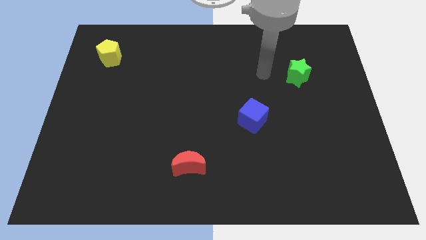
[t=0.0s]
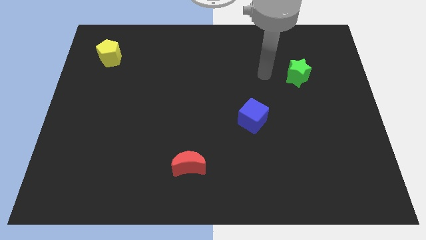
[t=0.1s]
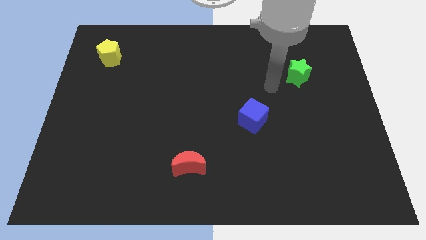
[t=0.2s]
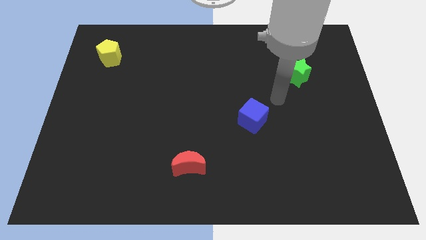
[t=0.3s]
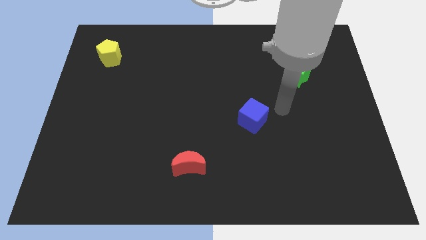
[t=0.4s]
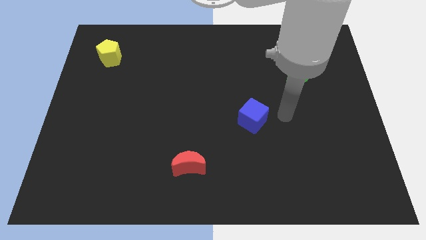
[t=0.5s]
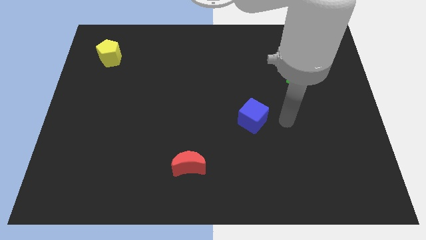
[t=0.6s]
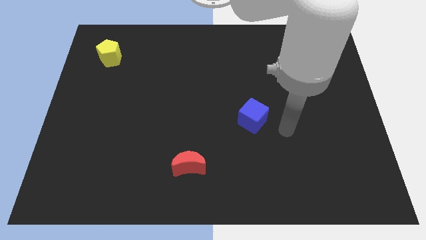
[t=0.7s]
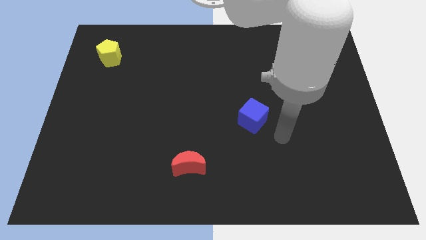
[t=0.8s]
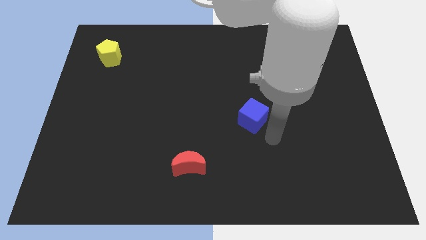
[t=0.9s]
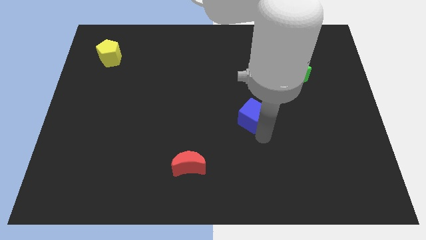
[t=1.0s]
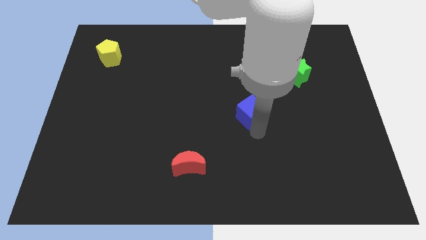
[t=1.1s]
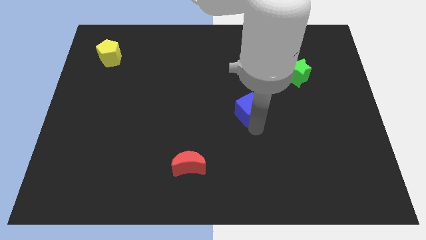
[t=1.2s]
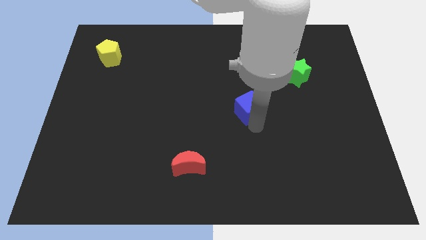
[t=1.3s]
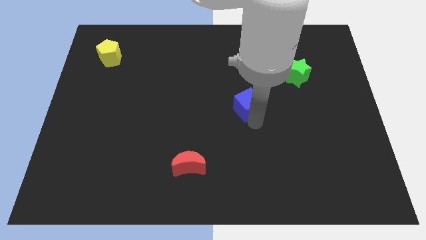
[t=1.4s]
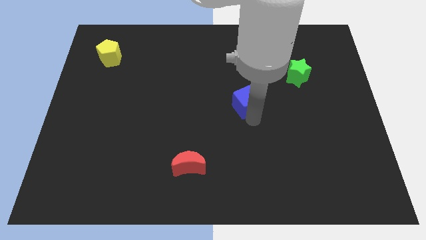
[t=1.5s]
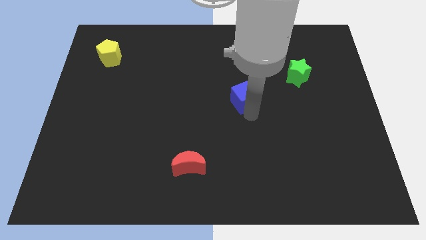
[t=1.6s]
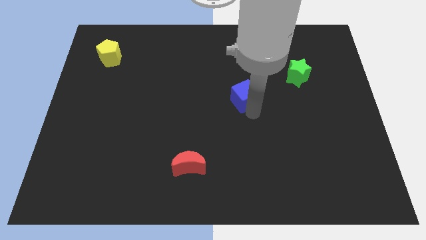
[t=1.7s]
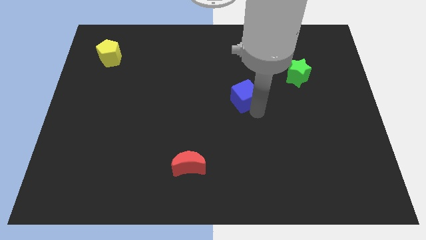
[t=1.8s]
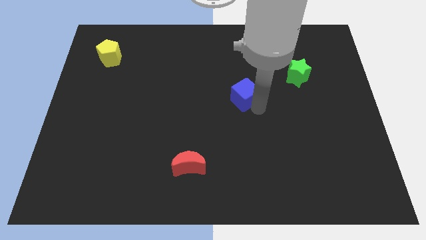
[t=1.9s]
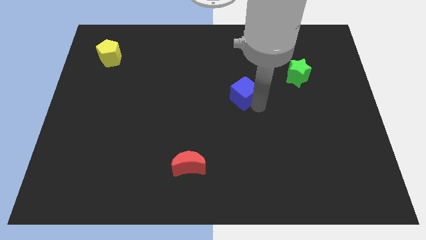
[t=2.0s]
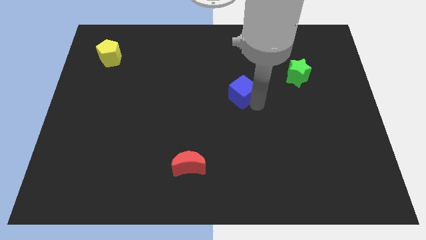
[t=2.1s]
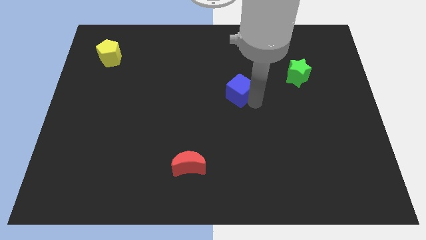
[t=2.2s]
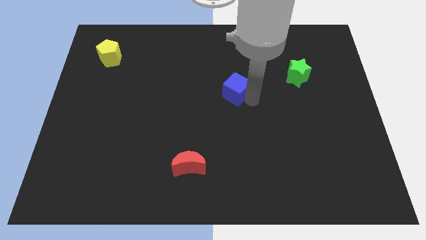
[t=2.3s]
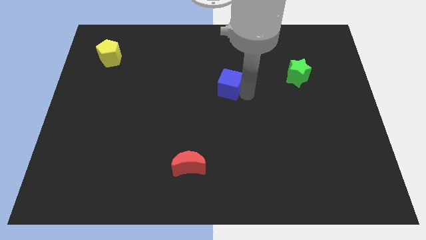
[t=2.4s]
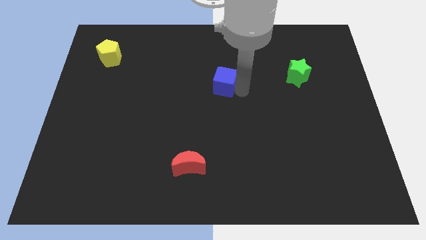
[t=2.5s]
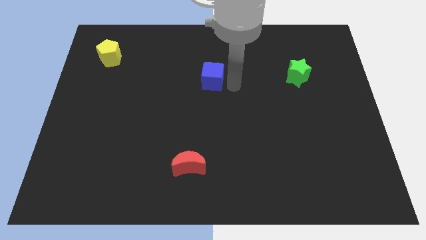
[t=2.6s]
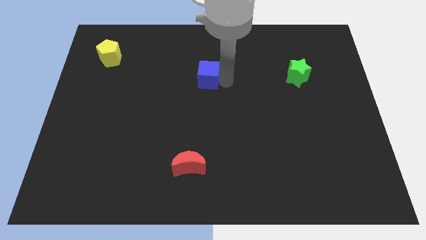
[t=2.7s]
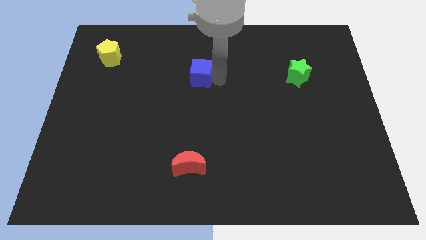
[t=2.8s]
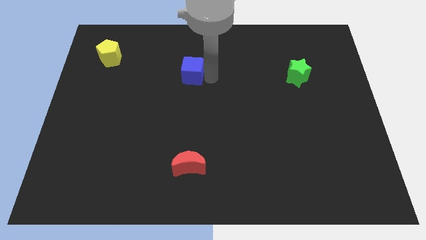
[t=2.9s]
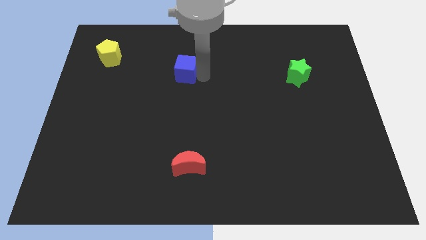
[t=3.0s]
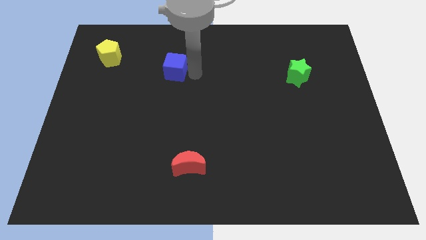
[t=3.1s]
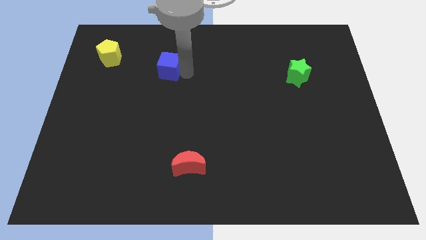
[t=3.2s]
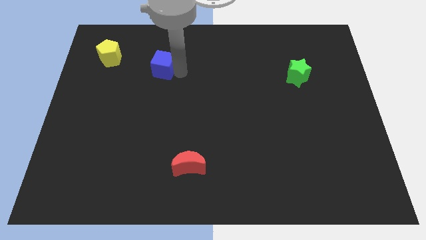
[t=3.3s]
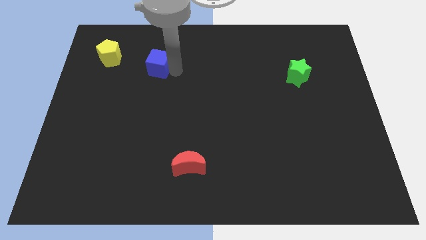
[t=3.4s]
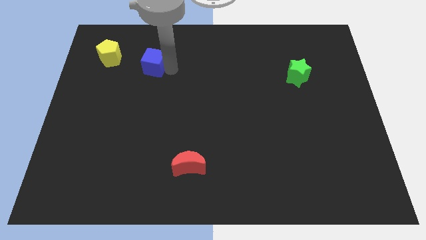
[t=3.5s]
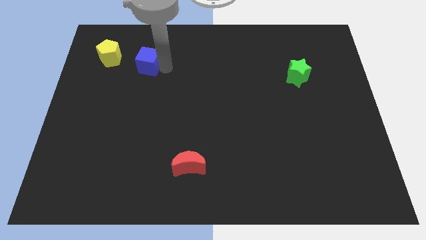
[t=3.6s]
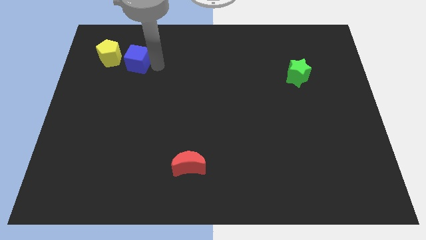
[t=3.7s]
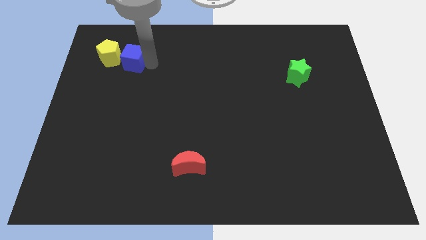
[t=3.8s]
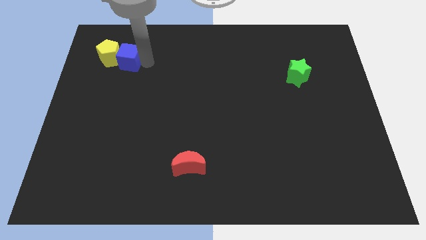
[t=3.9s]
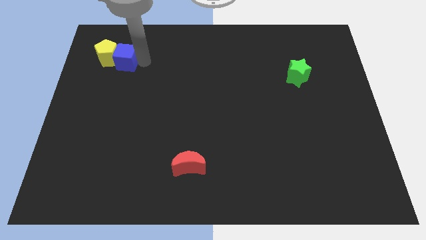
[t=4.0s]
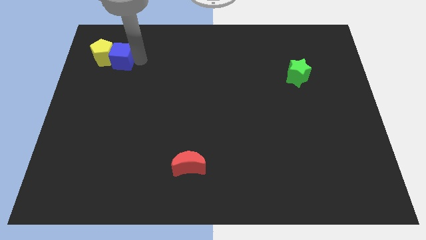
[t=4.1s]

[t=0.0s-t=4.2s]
push the blue block towards the pentagon

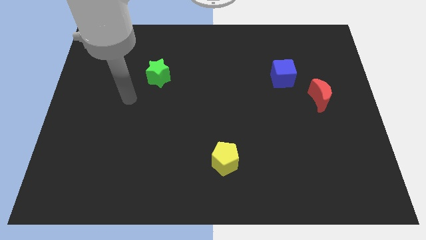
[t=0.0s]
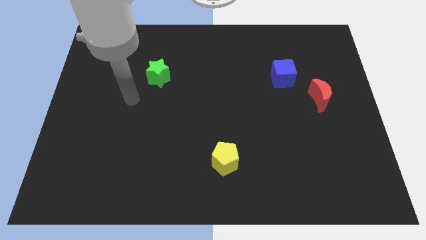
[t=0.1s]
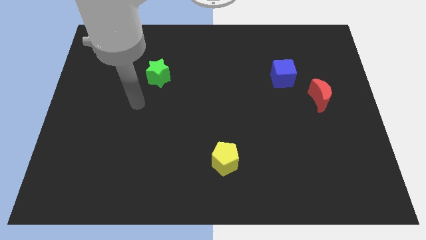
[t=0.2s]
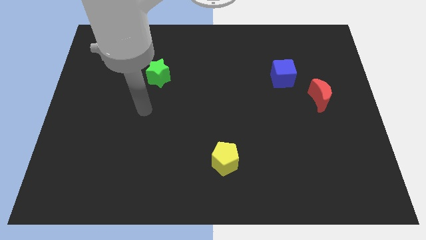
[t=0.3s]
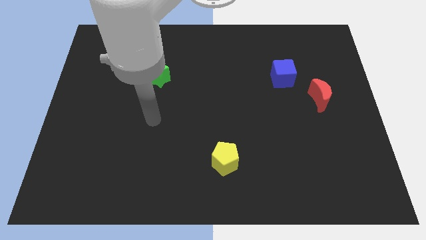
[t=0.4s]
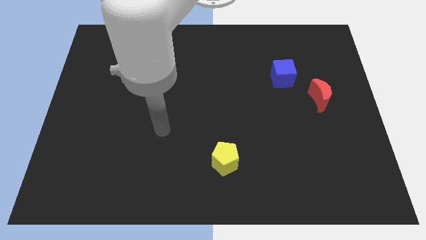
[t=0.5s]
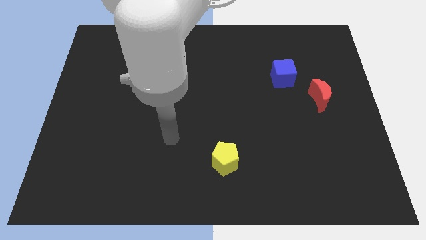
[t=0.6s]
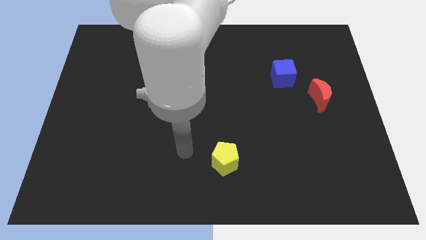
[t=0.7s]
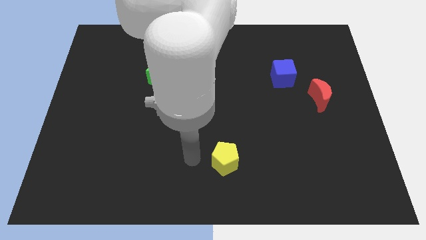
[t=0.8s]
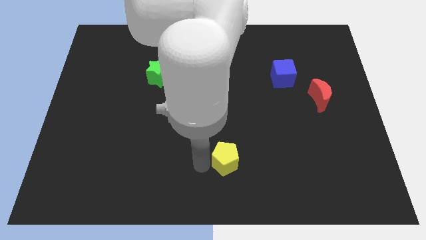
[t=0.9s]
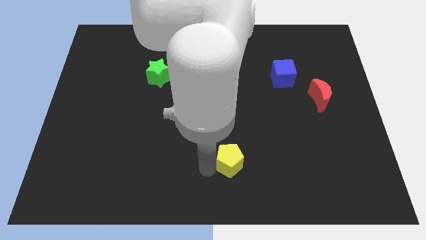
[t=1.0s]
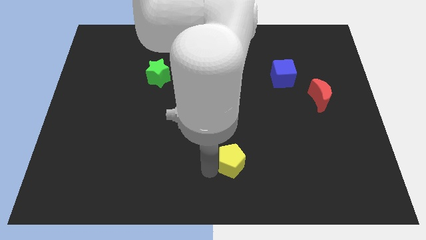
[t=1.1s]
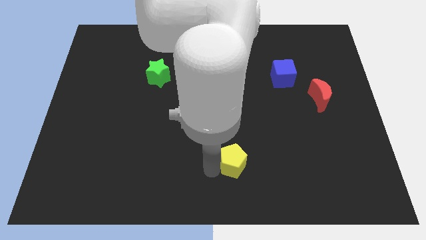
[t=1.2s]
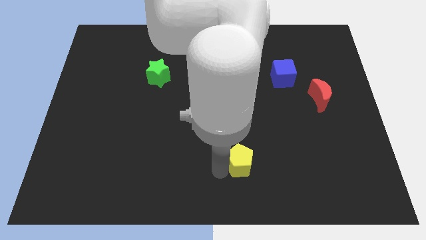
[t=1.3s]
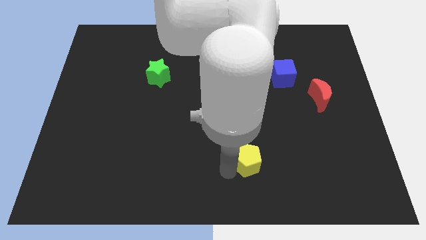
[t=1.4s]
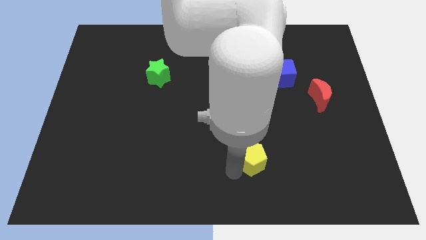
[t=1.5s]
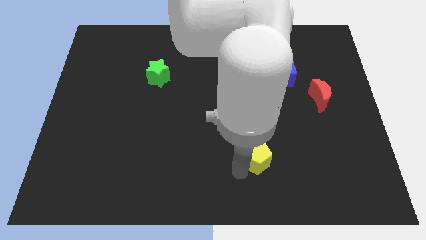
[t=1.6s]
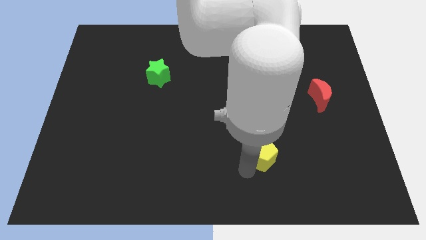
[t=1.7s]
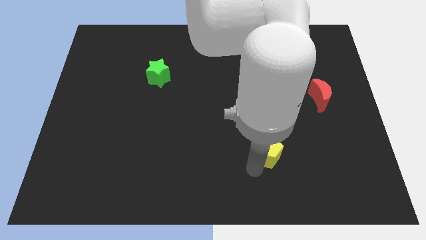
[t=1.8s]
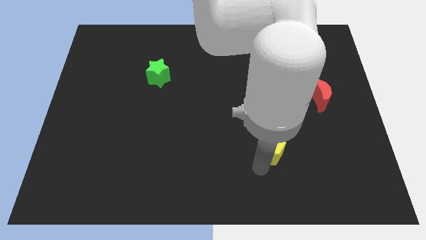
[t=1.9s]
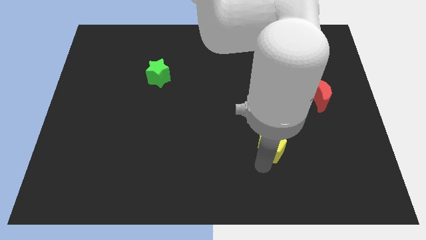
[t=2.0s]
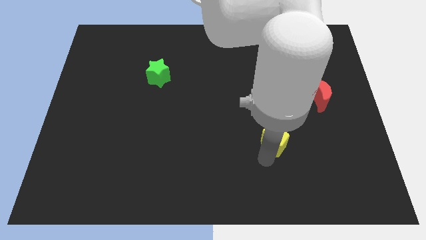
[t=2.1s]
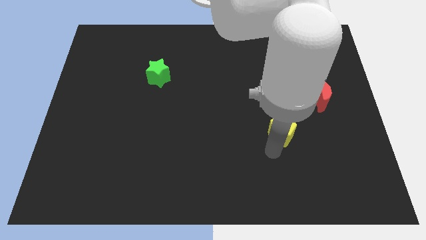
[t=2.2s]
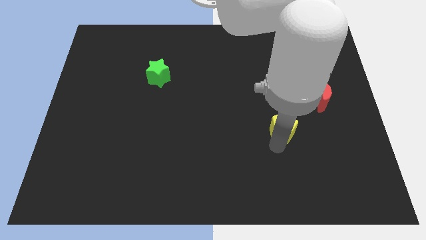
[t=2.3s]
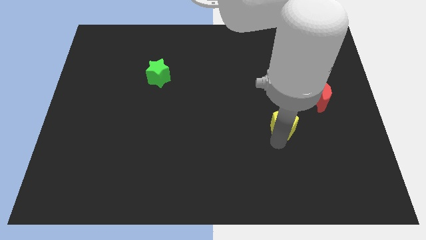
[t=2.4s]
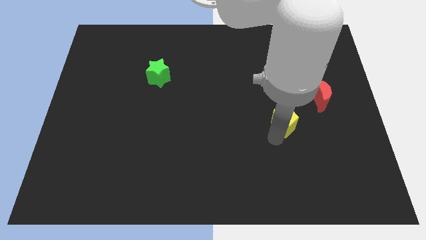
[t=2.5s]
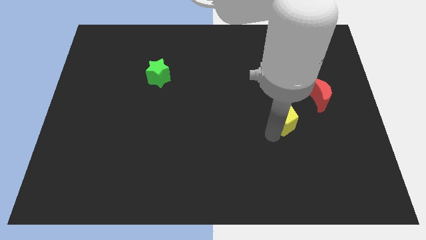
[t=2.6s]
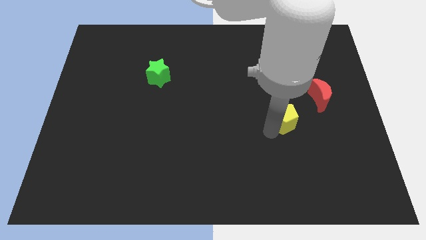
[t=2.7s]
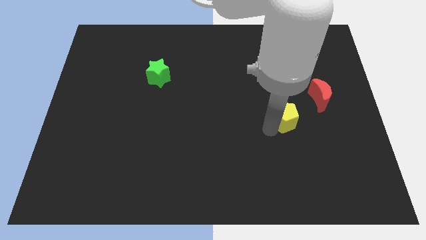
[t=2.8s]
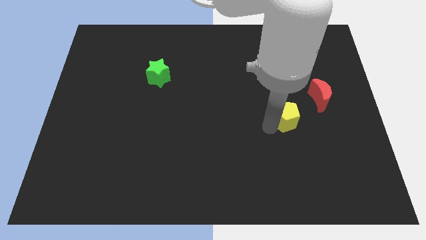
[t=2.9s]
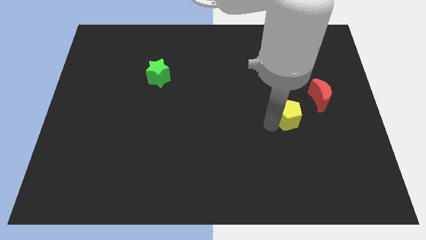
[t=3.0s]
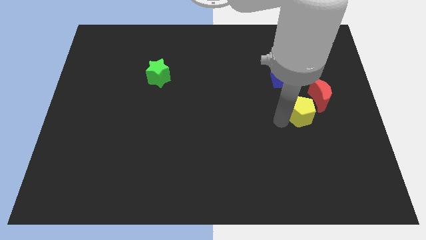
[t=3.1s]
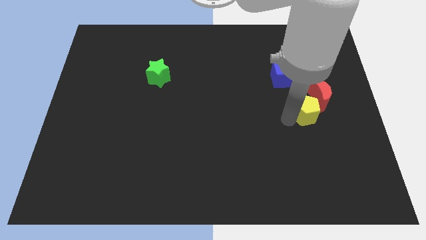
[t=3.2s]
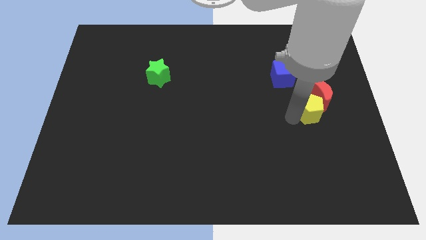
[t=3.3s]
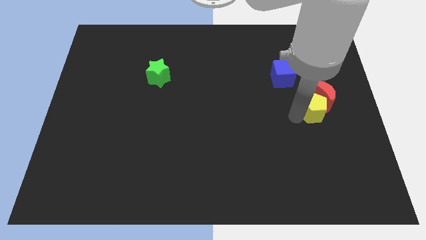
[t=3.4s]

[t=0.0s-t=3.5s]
move the yellow block towards the red moon

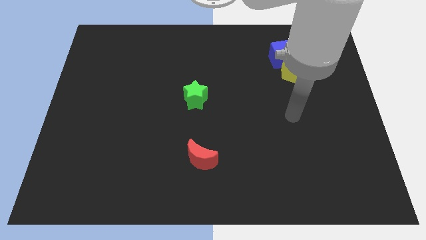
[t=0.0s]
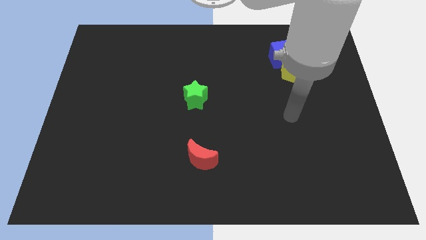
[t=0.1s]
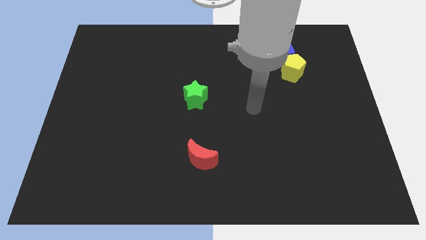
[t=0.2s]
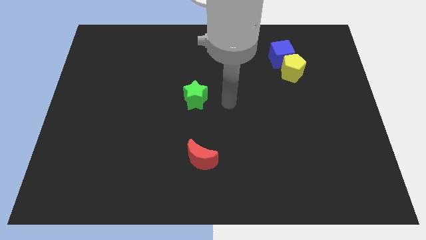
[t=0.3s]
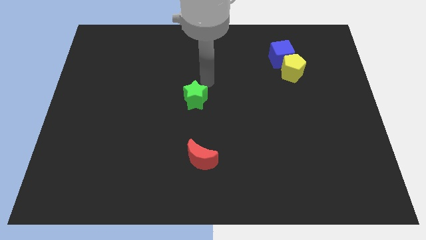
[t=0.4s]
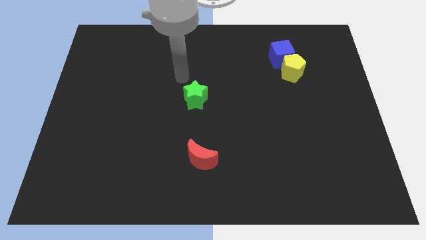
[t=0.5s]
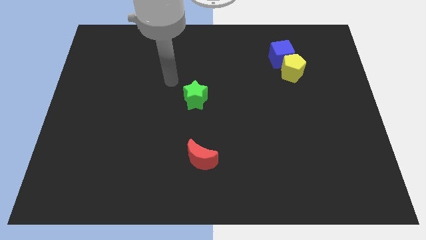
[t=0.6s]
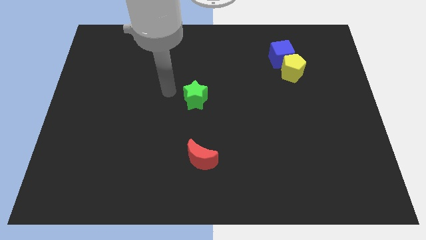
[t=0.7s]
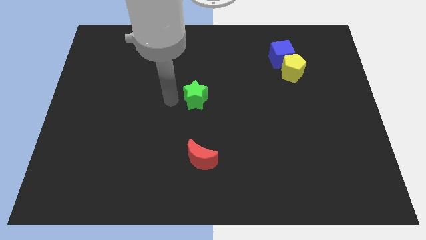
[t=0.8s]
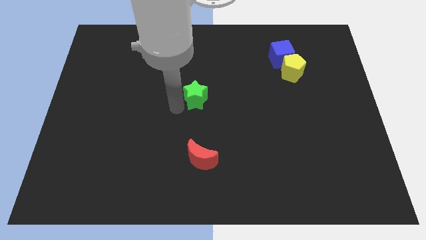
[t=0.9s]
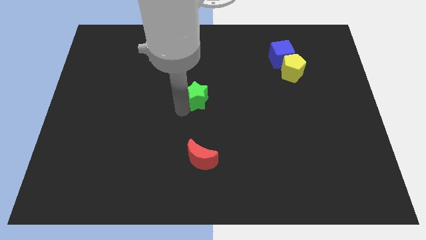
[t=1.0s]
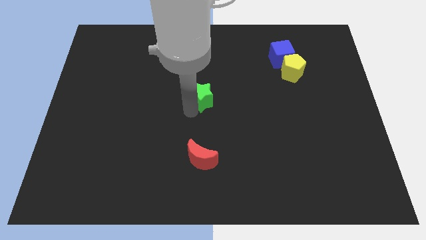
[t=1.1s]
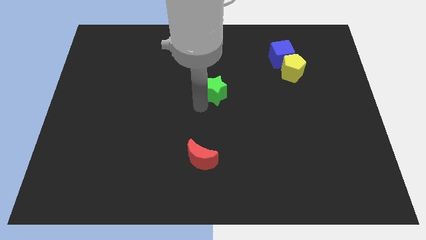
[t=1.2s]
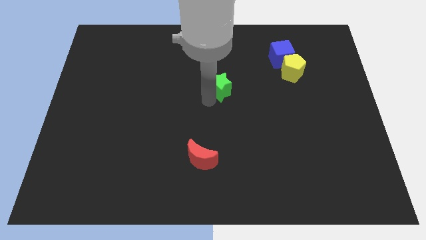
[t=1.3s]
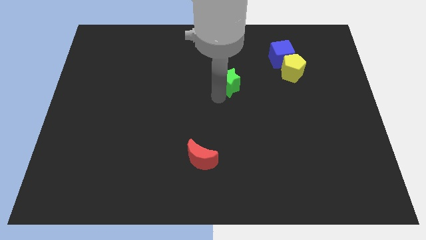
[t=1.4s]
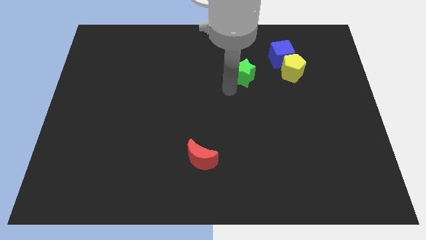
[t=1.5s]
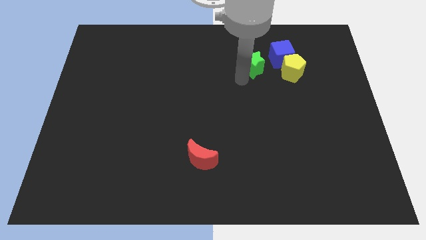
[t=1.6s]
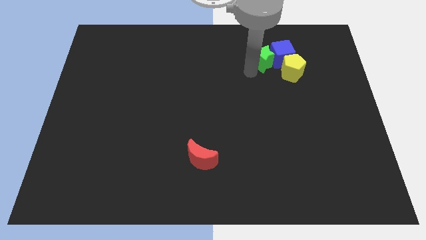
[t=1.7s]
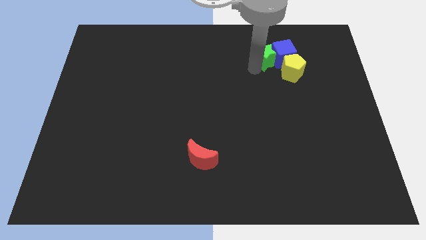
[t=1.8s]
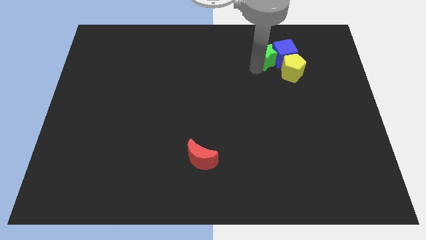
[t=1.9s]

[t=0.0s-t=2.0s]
push the star close to the cube
